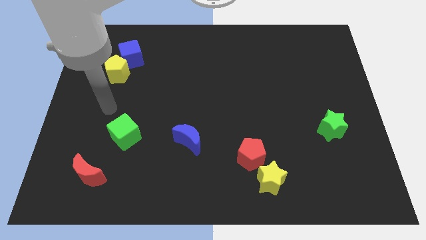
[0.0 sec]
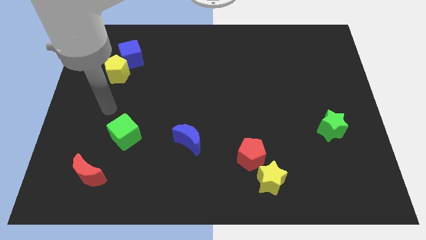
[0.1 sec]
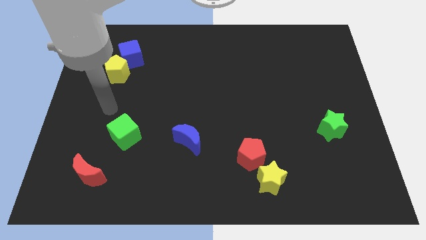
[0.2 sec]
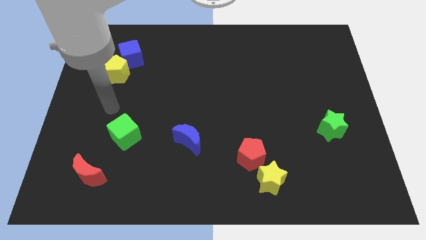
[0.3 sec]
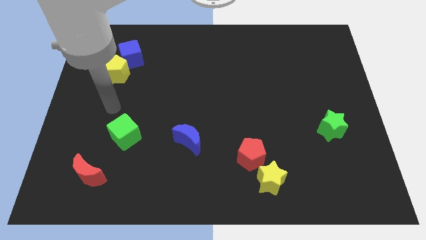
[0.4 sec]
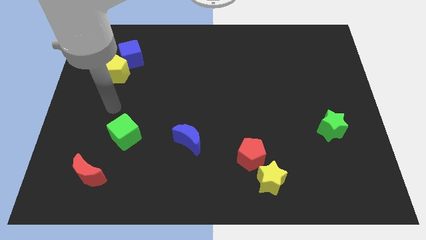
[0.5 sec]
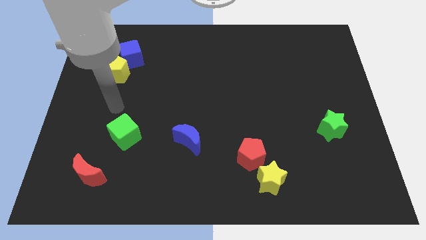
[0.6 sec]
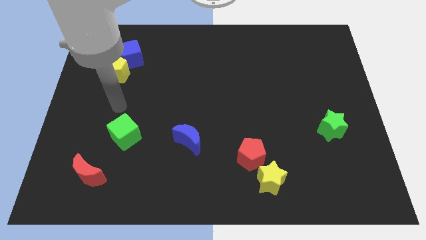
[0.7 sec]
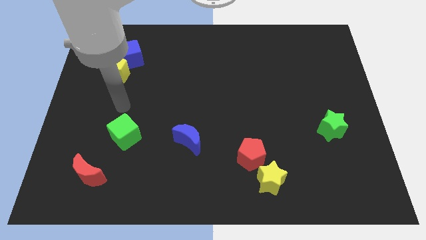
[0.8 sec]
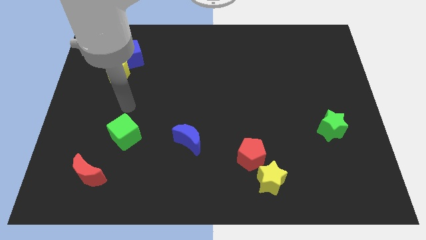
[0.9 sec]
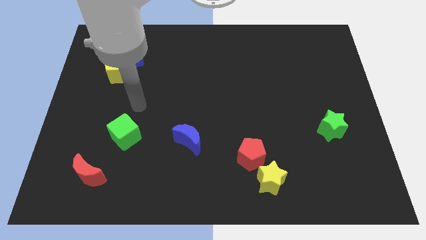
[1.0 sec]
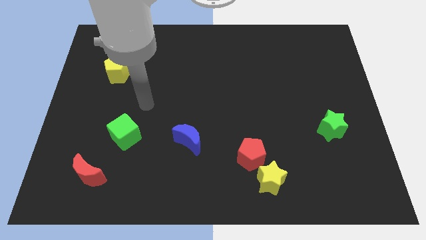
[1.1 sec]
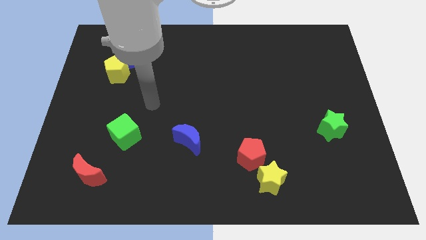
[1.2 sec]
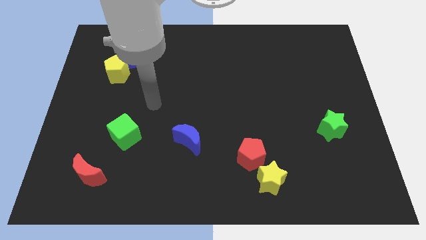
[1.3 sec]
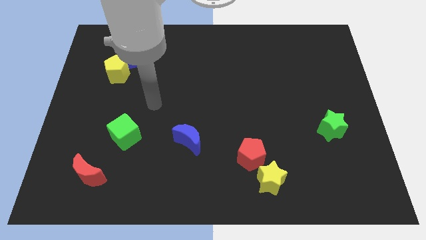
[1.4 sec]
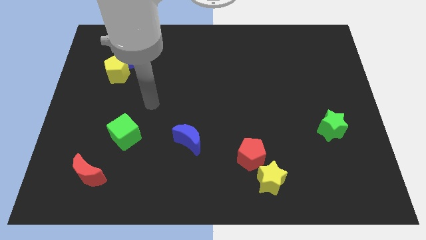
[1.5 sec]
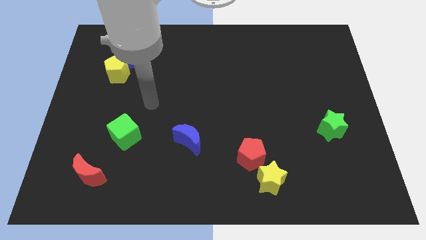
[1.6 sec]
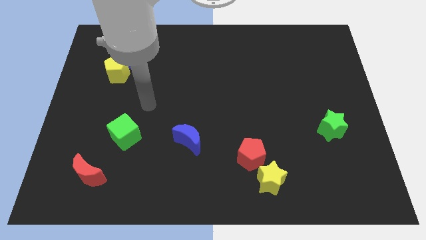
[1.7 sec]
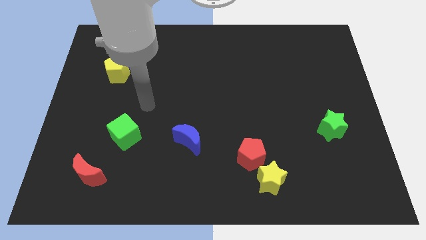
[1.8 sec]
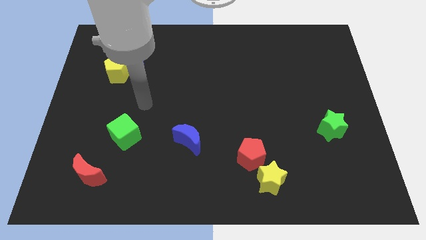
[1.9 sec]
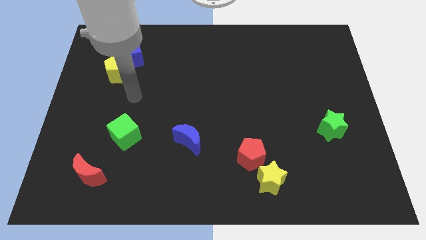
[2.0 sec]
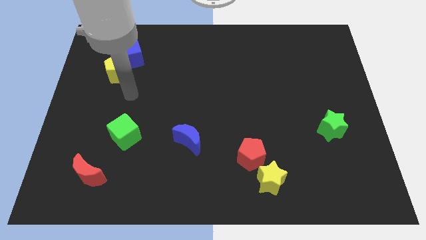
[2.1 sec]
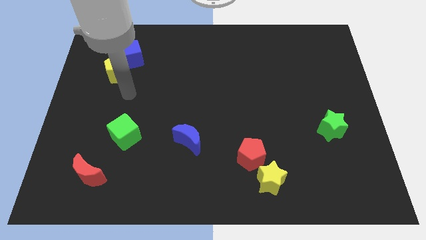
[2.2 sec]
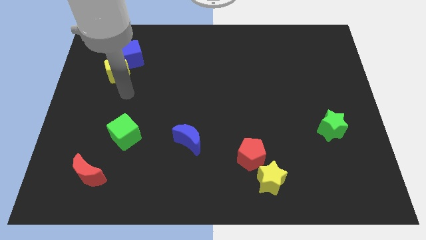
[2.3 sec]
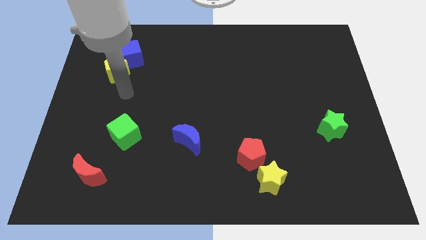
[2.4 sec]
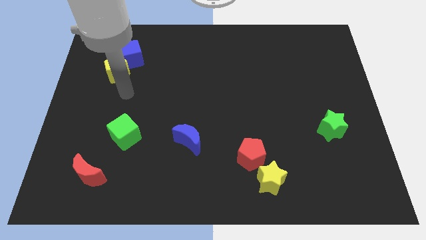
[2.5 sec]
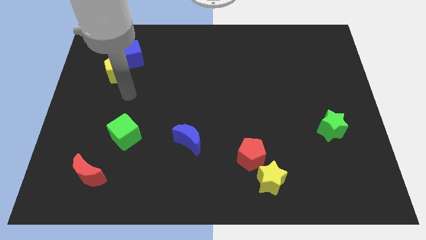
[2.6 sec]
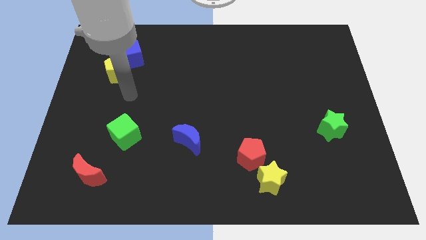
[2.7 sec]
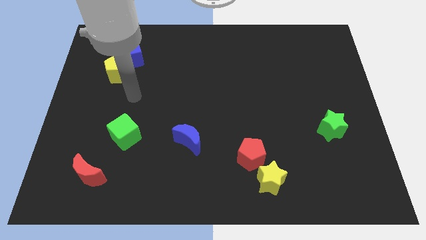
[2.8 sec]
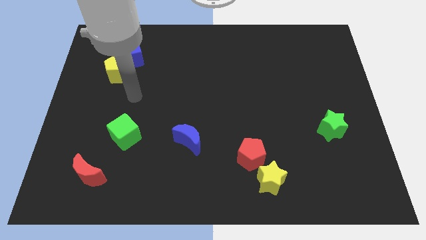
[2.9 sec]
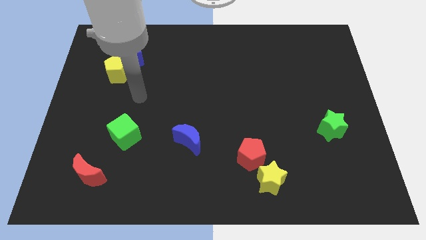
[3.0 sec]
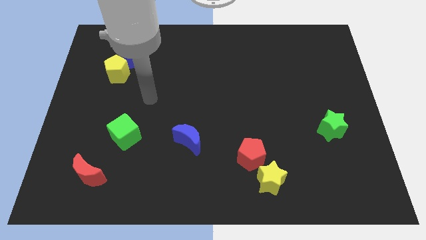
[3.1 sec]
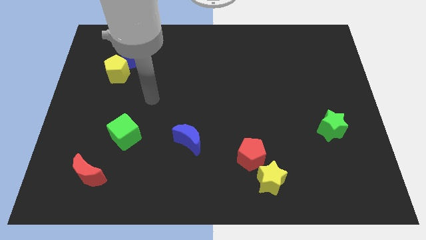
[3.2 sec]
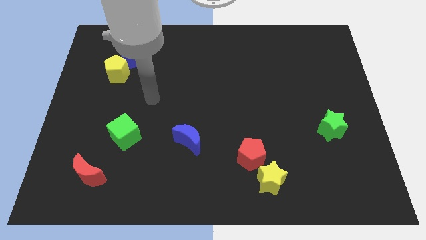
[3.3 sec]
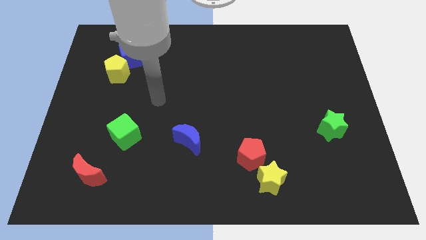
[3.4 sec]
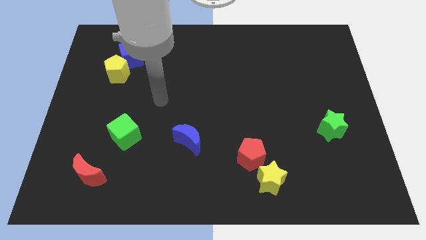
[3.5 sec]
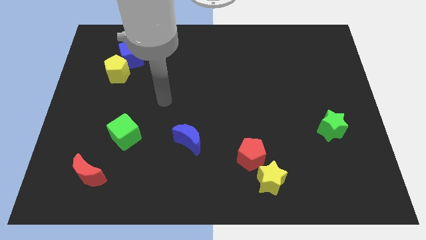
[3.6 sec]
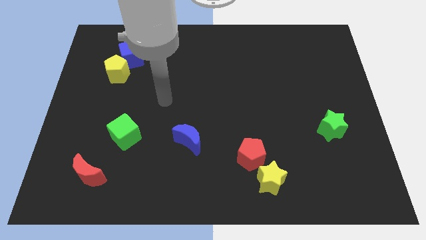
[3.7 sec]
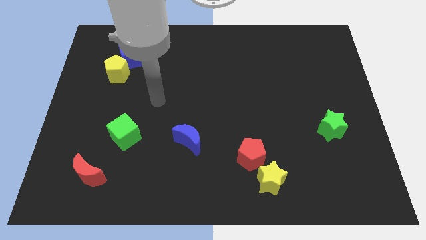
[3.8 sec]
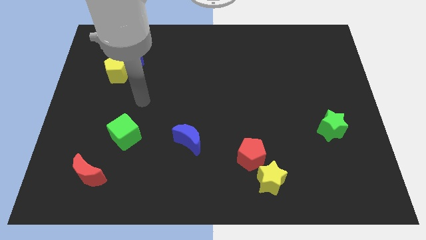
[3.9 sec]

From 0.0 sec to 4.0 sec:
push your arm in between green cube and yellow pentagon

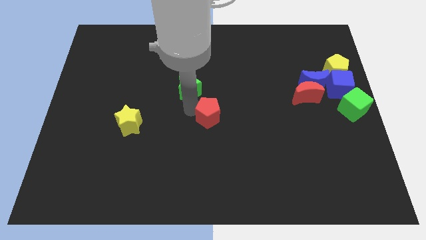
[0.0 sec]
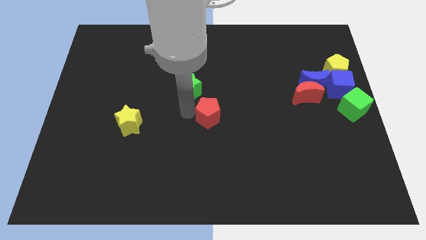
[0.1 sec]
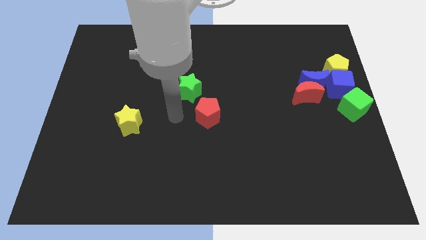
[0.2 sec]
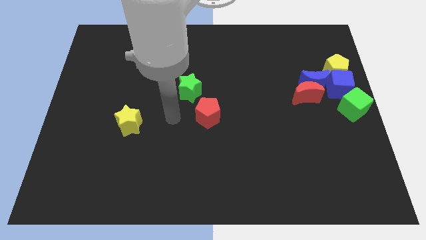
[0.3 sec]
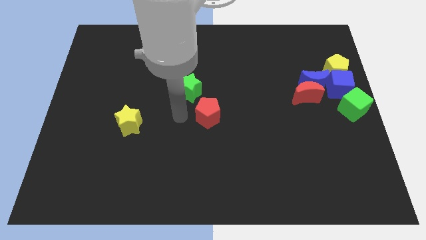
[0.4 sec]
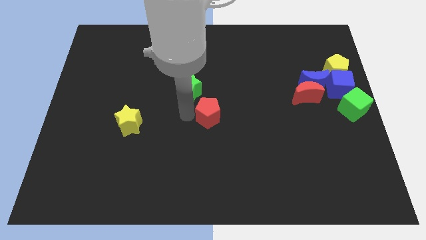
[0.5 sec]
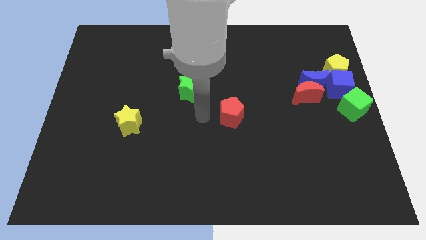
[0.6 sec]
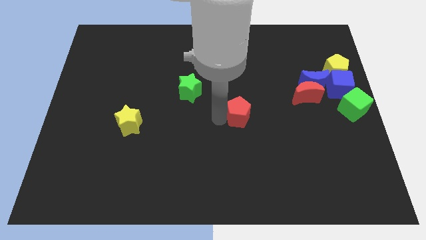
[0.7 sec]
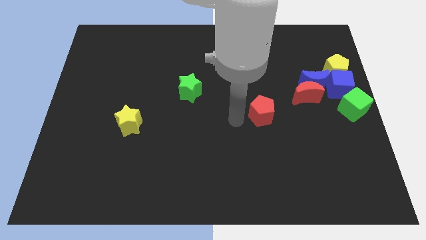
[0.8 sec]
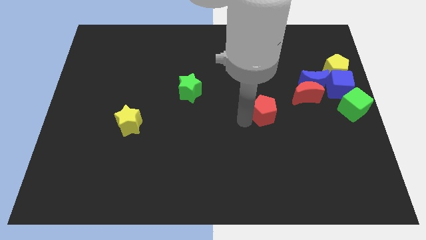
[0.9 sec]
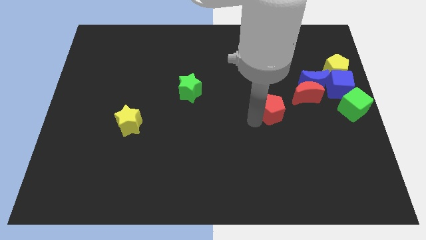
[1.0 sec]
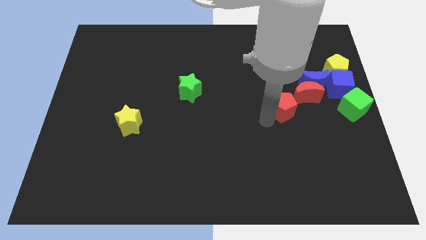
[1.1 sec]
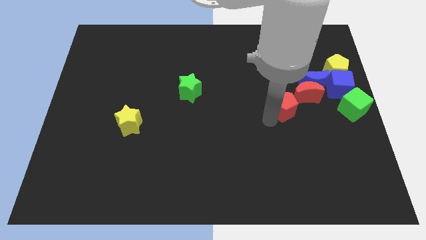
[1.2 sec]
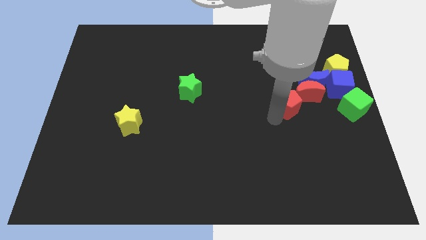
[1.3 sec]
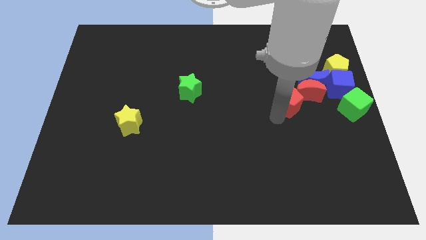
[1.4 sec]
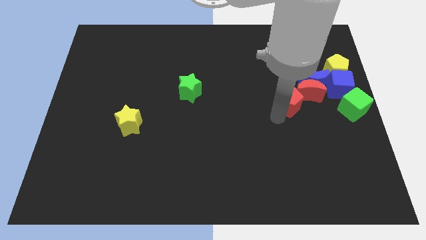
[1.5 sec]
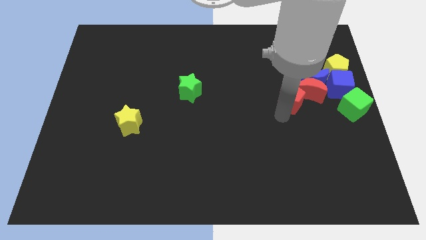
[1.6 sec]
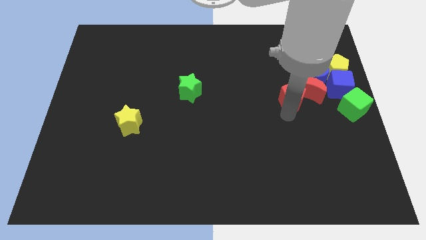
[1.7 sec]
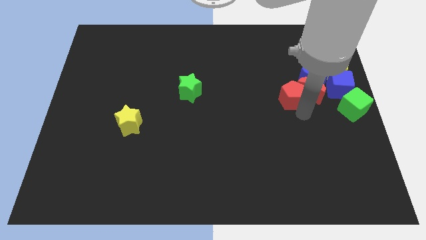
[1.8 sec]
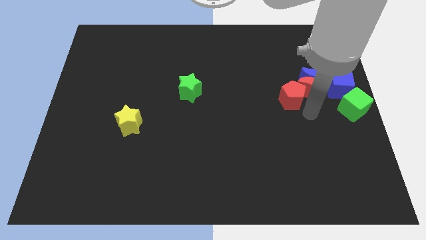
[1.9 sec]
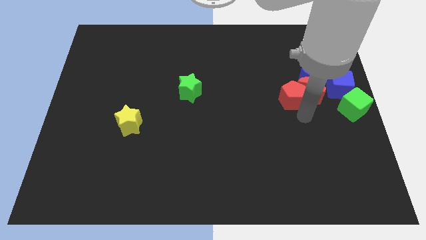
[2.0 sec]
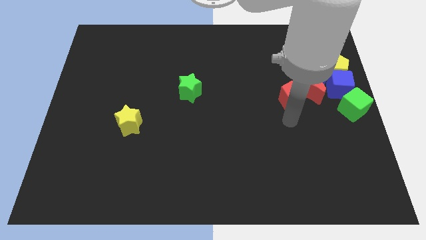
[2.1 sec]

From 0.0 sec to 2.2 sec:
slide red pentagon into red moon

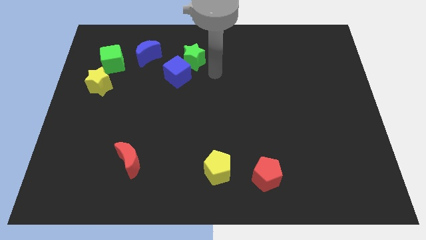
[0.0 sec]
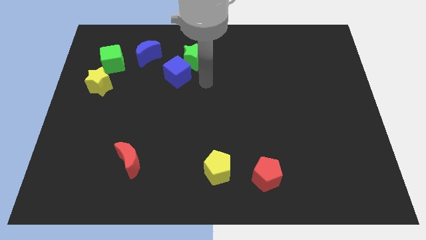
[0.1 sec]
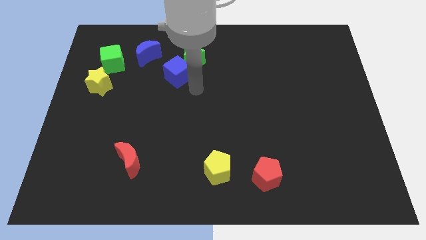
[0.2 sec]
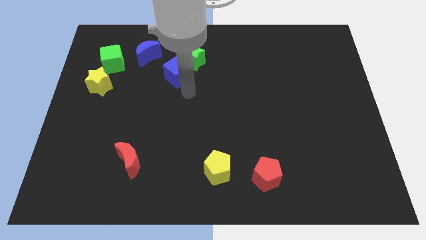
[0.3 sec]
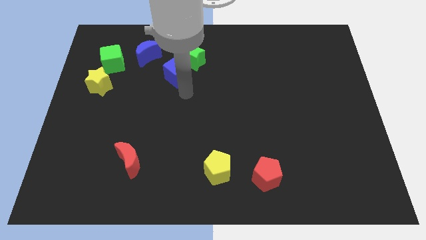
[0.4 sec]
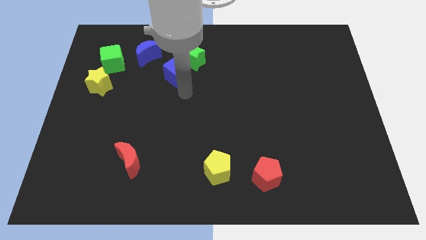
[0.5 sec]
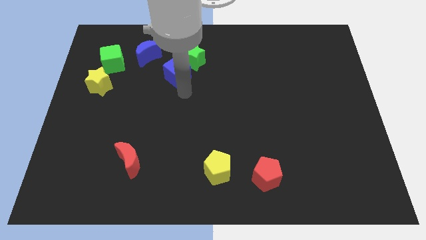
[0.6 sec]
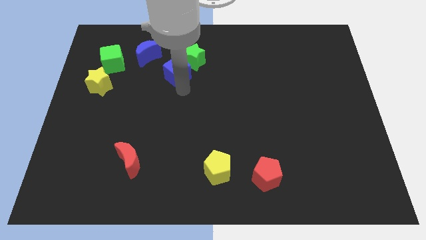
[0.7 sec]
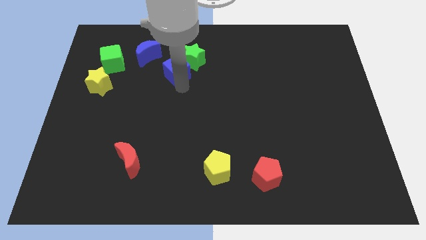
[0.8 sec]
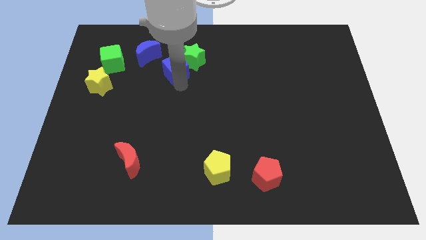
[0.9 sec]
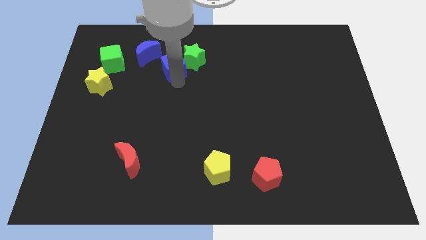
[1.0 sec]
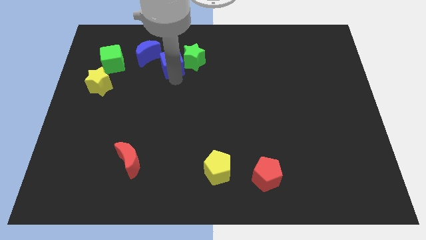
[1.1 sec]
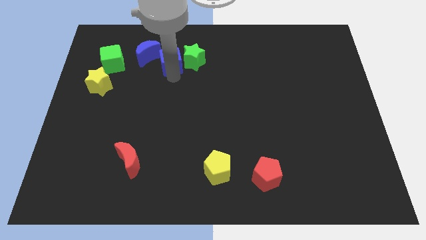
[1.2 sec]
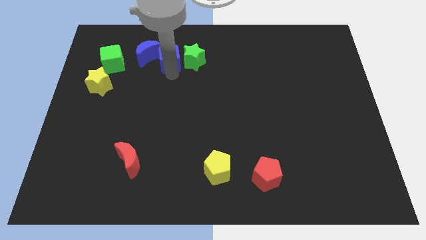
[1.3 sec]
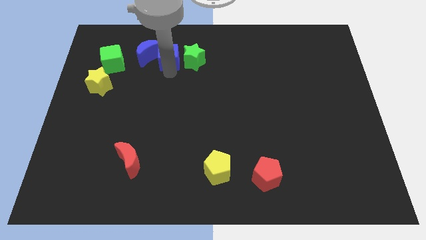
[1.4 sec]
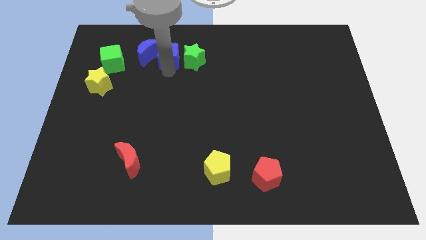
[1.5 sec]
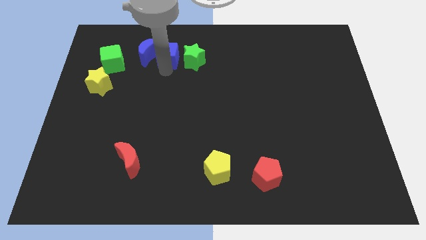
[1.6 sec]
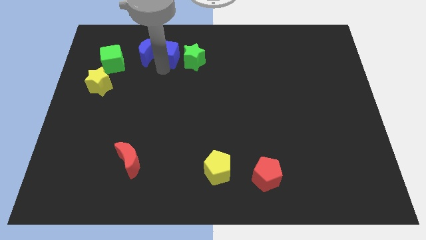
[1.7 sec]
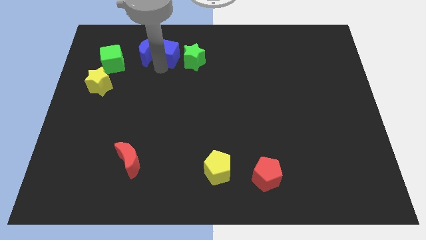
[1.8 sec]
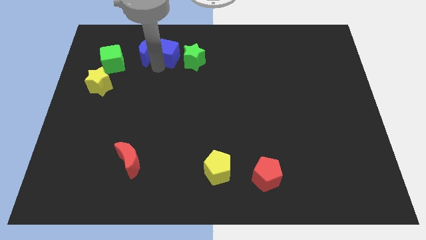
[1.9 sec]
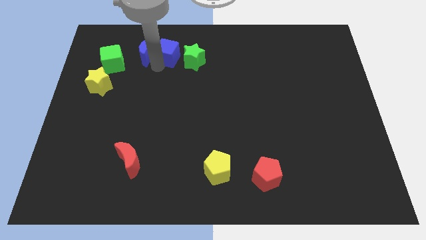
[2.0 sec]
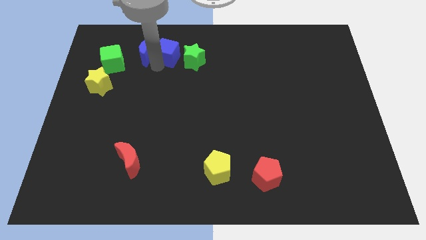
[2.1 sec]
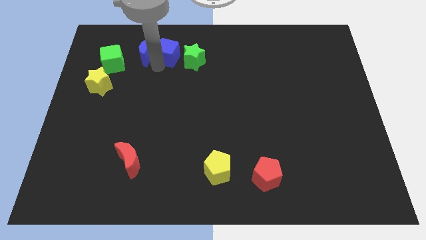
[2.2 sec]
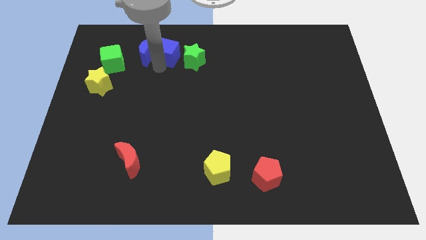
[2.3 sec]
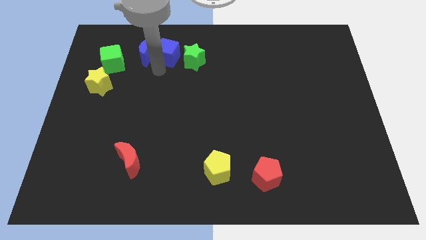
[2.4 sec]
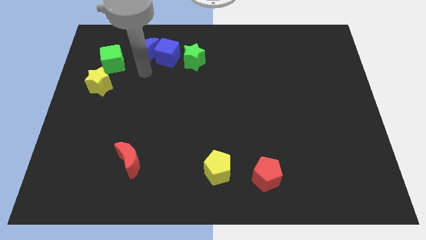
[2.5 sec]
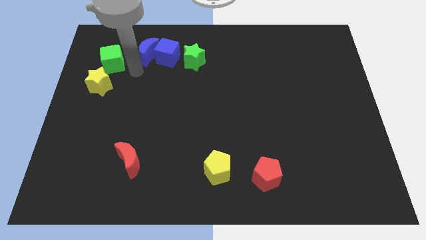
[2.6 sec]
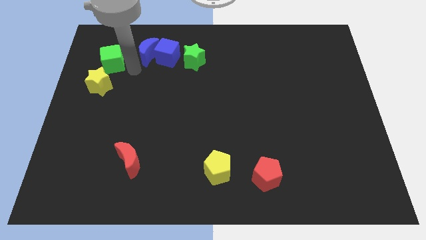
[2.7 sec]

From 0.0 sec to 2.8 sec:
move blue cube slightly up
